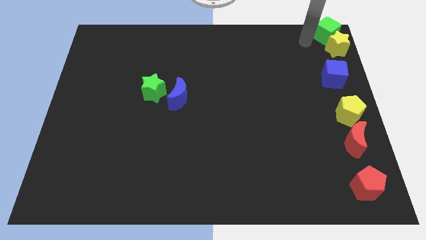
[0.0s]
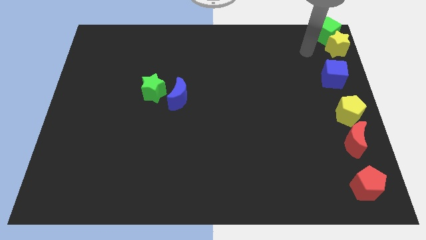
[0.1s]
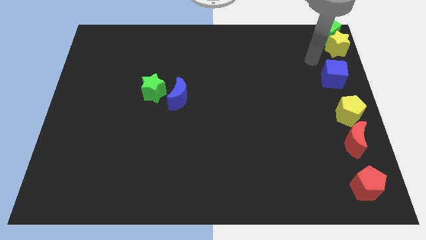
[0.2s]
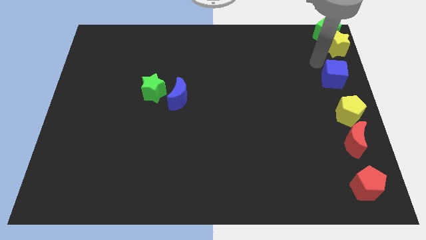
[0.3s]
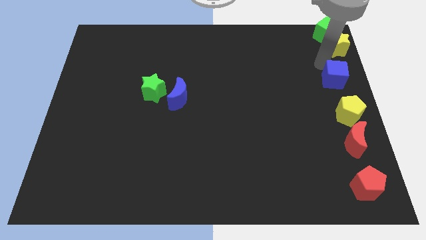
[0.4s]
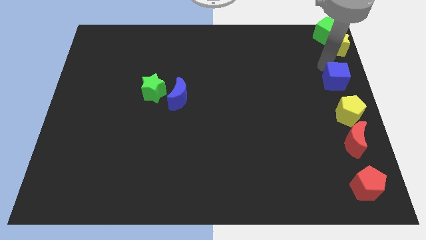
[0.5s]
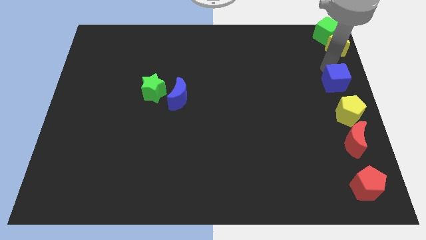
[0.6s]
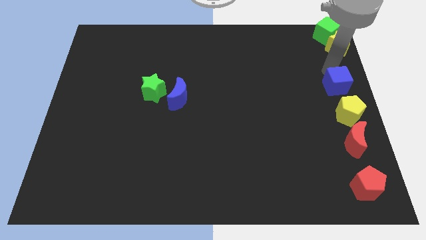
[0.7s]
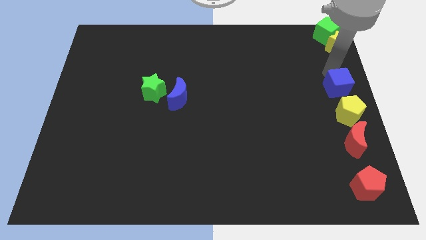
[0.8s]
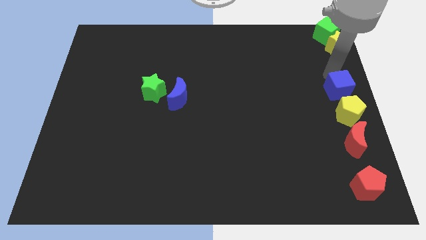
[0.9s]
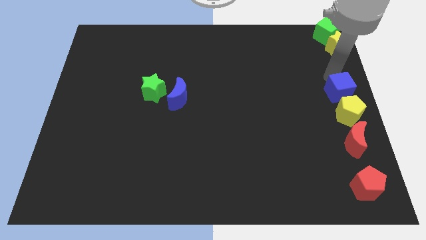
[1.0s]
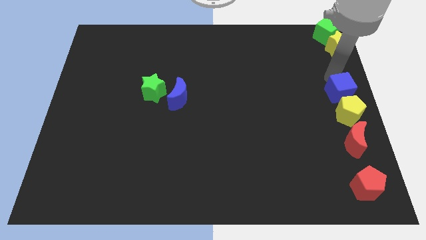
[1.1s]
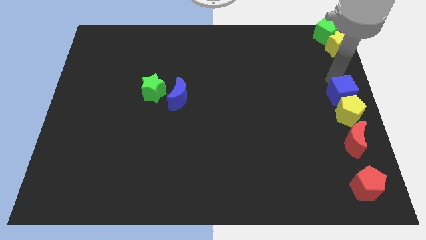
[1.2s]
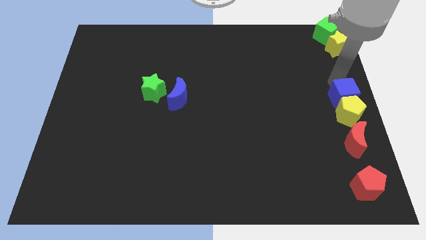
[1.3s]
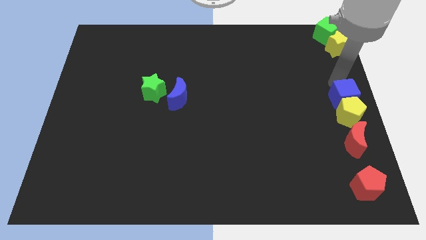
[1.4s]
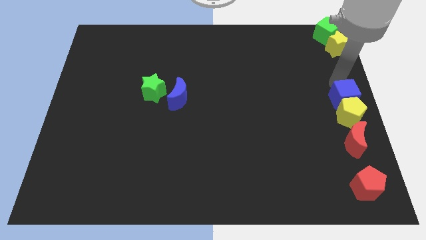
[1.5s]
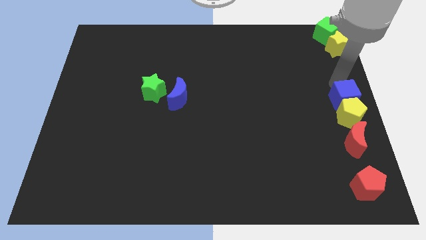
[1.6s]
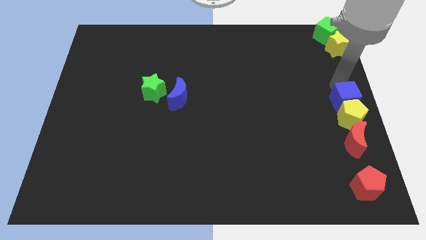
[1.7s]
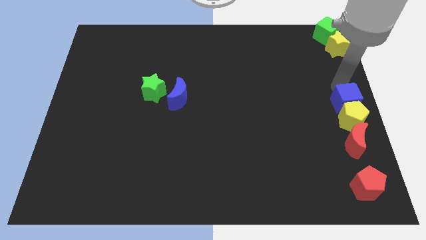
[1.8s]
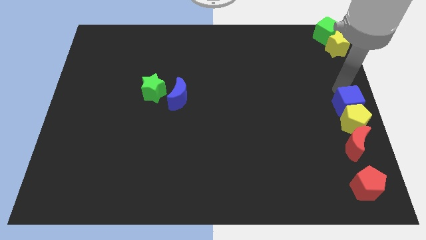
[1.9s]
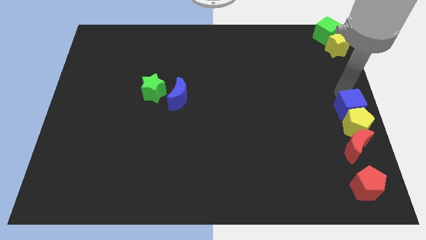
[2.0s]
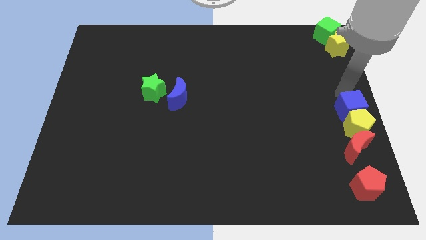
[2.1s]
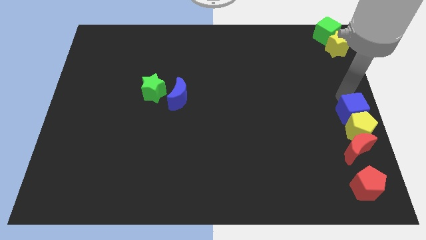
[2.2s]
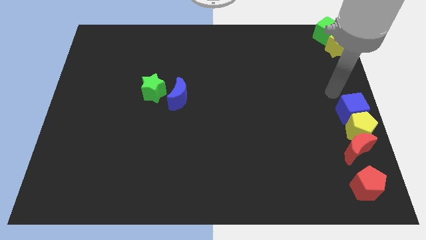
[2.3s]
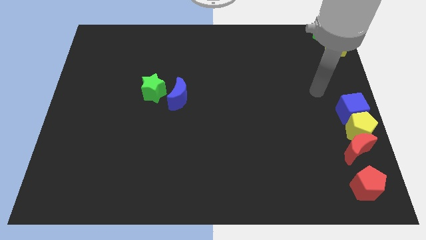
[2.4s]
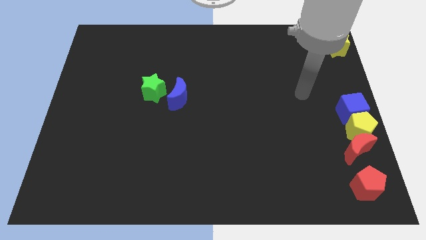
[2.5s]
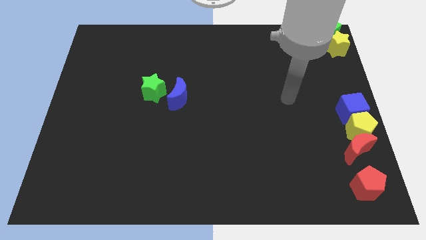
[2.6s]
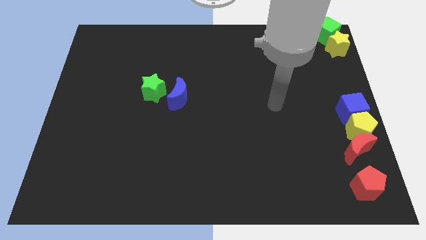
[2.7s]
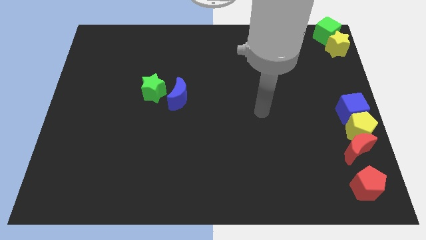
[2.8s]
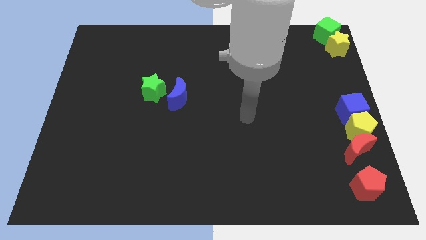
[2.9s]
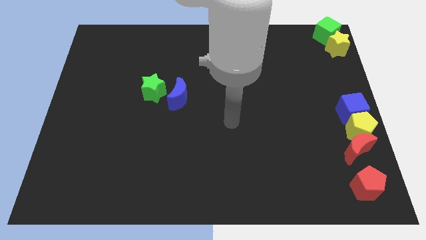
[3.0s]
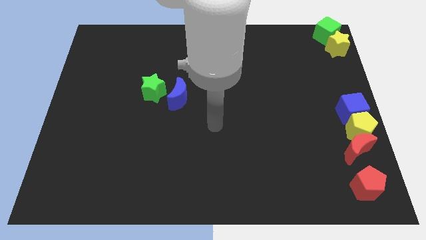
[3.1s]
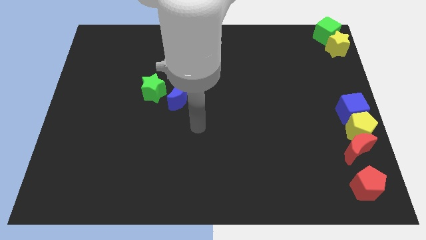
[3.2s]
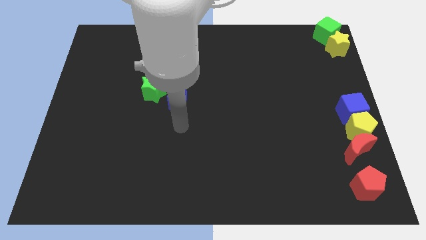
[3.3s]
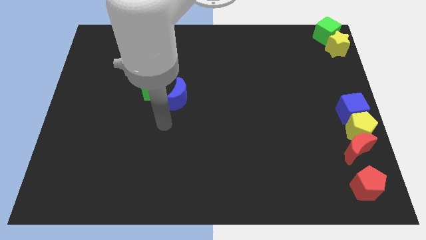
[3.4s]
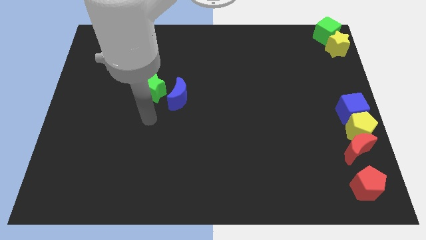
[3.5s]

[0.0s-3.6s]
move blue cube into the yellow pentagon

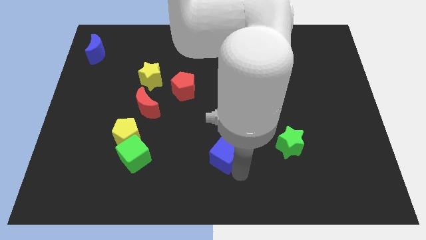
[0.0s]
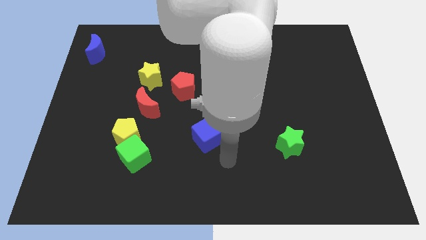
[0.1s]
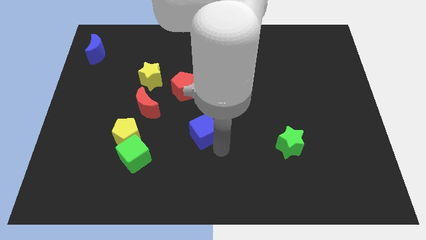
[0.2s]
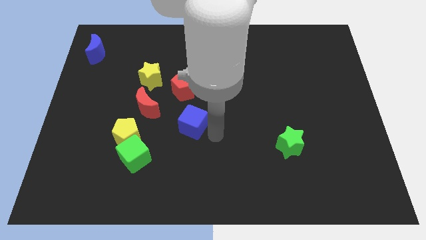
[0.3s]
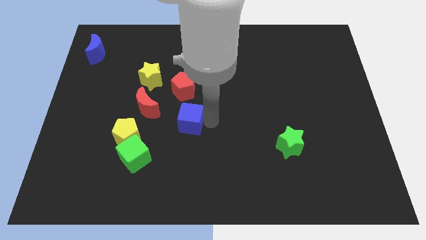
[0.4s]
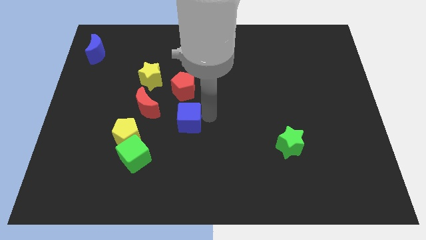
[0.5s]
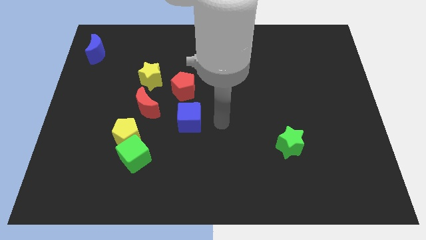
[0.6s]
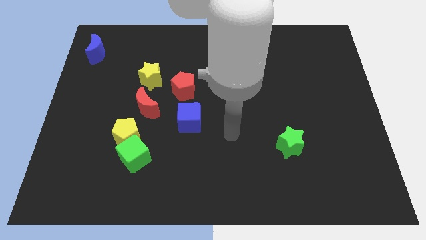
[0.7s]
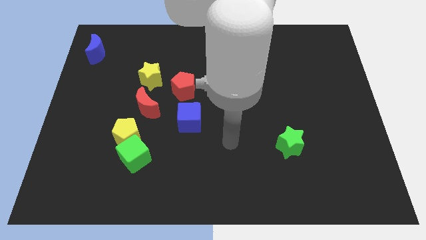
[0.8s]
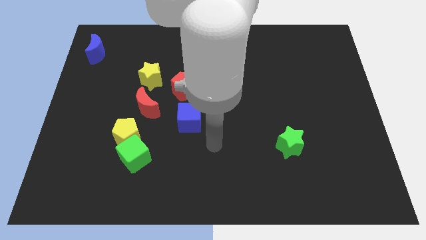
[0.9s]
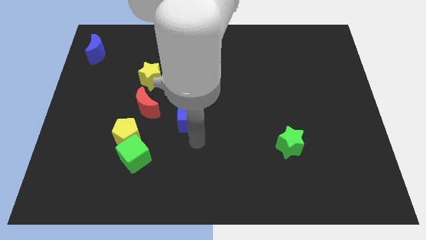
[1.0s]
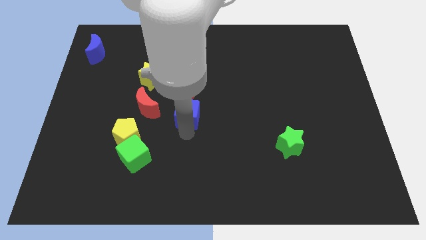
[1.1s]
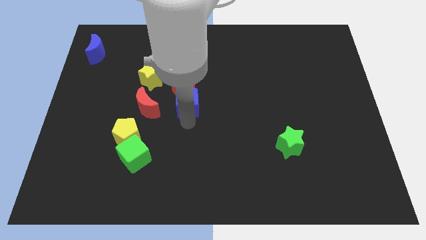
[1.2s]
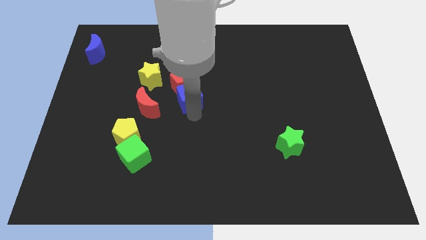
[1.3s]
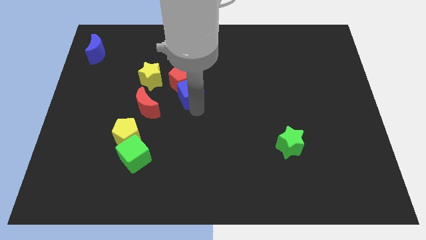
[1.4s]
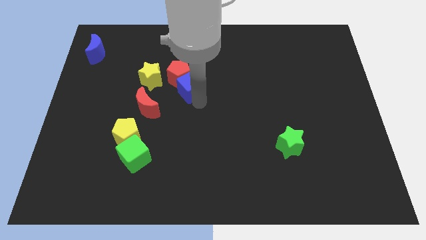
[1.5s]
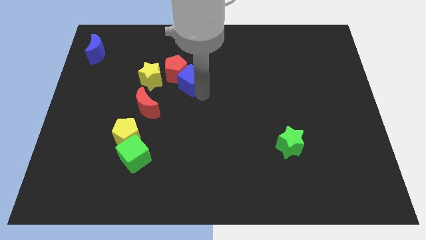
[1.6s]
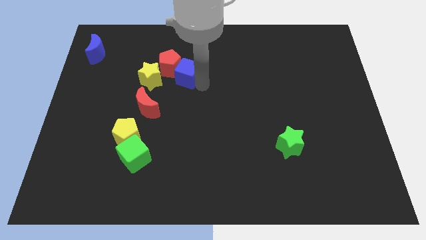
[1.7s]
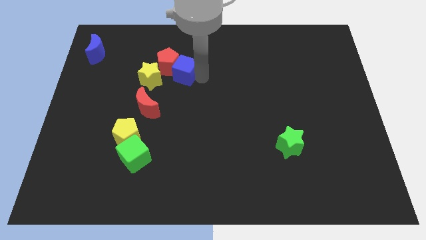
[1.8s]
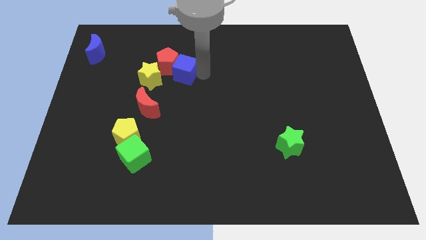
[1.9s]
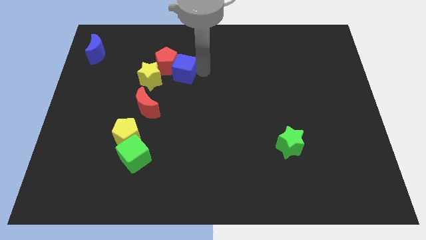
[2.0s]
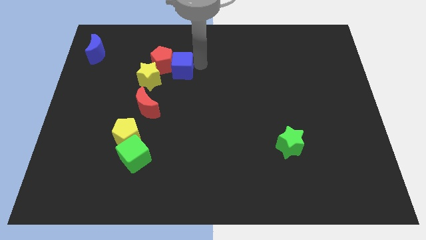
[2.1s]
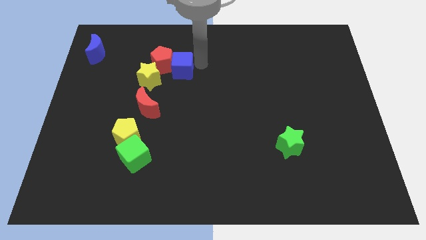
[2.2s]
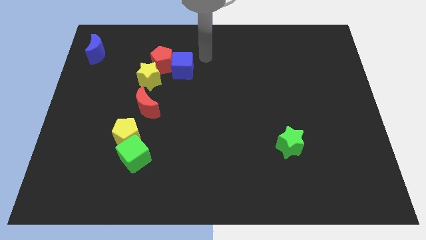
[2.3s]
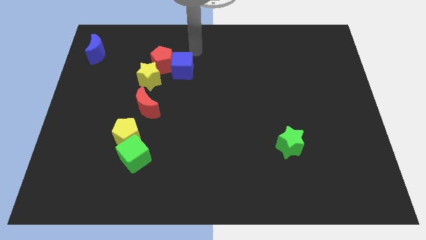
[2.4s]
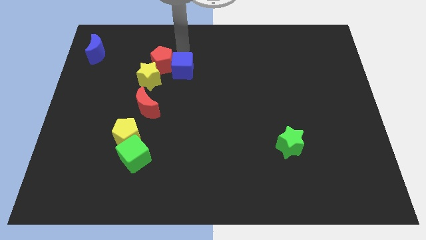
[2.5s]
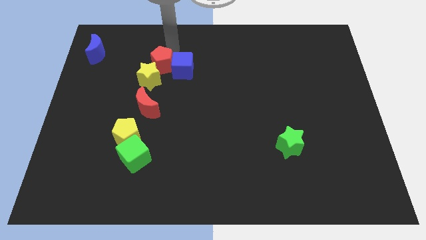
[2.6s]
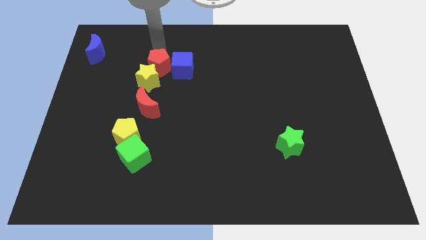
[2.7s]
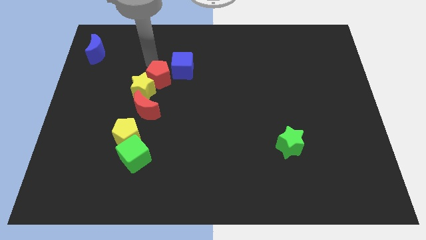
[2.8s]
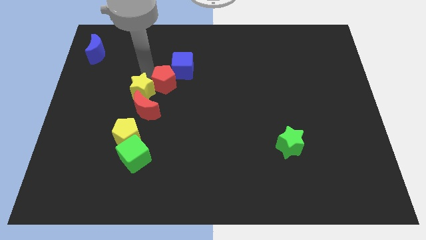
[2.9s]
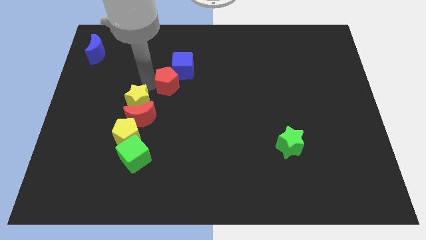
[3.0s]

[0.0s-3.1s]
push blue cube towards red pentagon

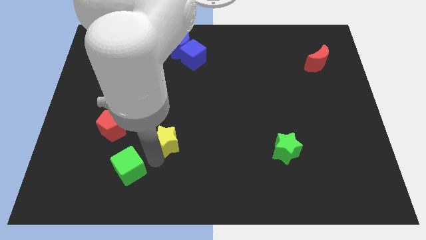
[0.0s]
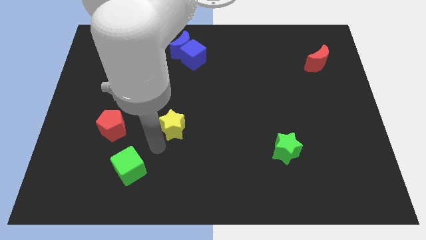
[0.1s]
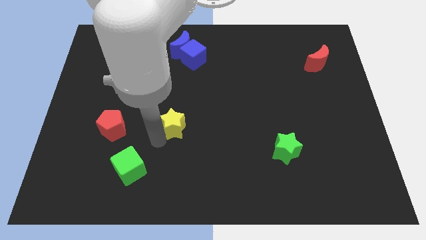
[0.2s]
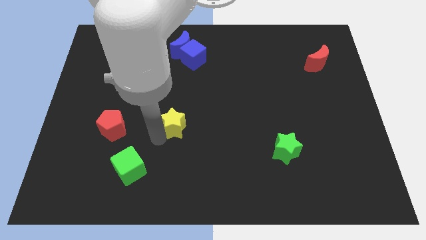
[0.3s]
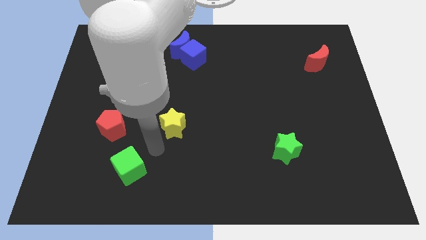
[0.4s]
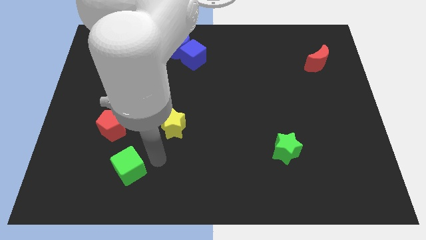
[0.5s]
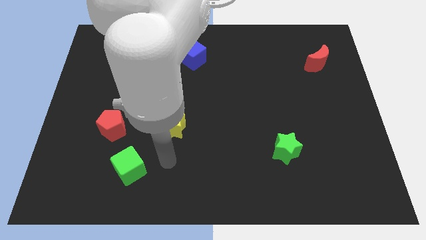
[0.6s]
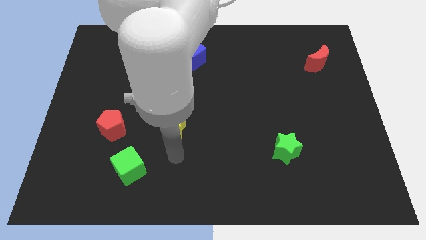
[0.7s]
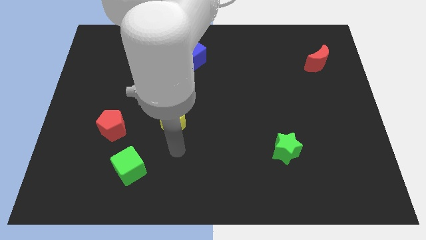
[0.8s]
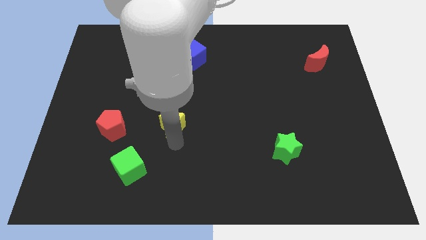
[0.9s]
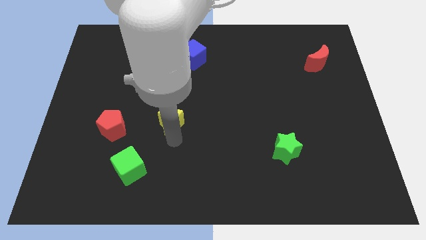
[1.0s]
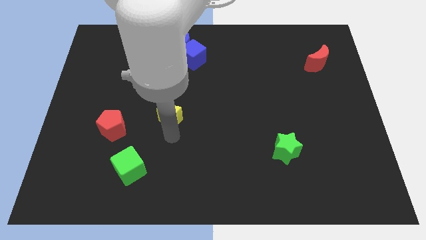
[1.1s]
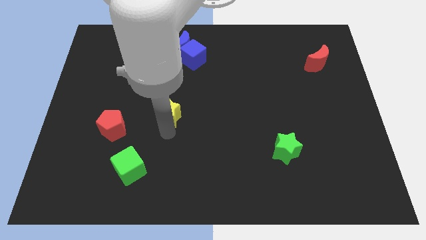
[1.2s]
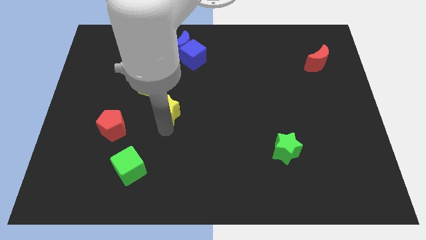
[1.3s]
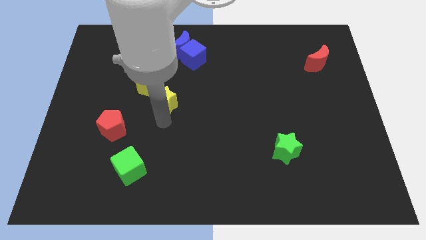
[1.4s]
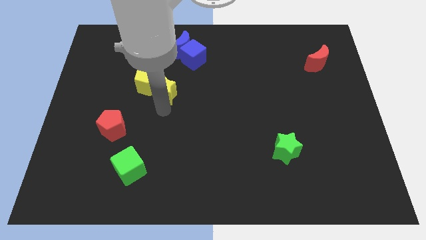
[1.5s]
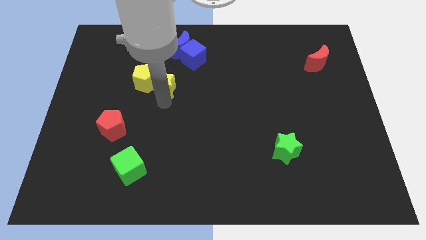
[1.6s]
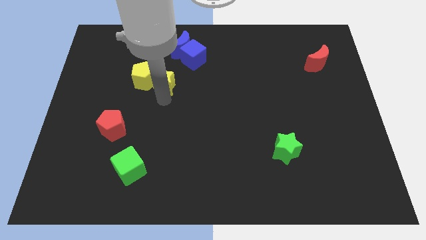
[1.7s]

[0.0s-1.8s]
move yellow star towards the yellow pentagon

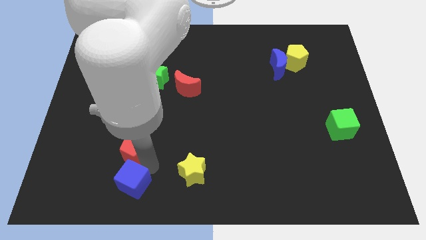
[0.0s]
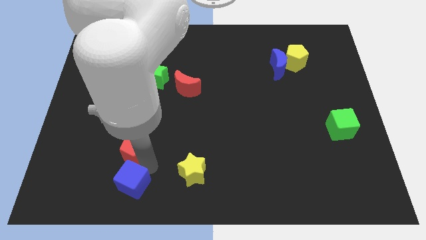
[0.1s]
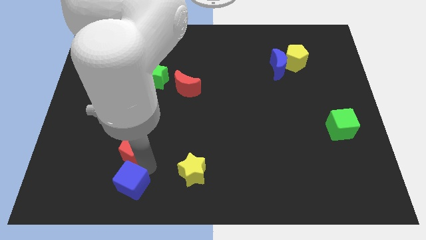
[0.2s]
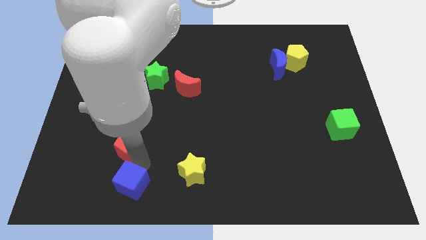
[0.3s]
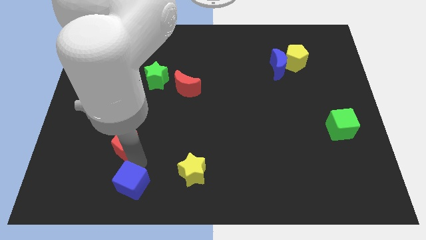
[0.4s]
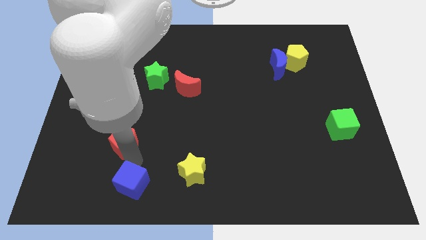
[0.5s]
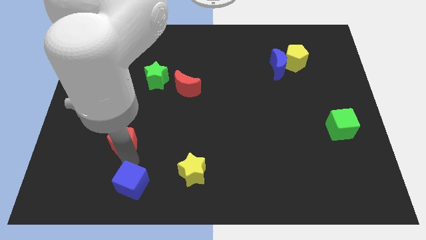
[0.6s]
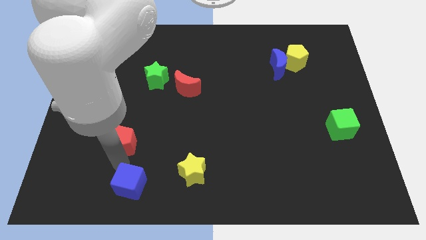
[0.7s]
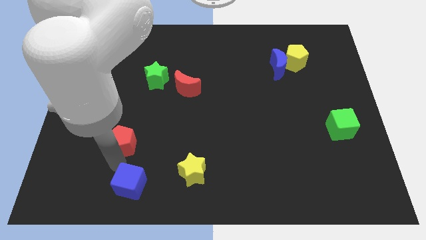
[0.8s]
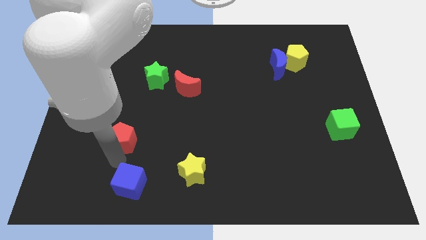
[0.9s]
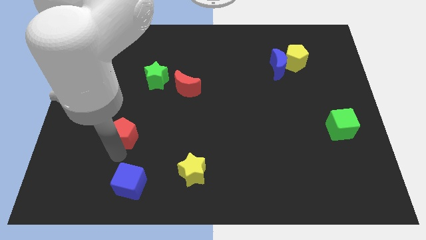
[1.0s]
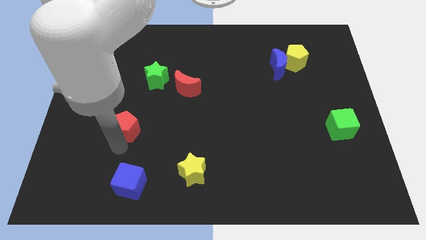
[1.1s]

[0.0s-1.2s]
separate the red pentagon and the blue cube
